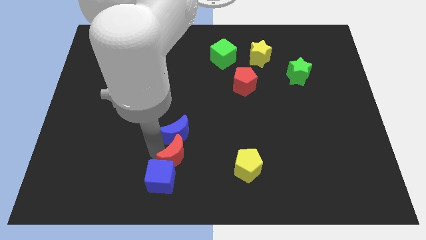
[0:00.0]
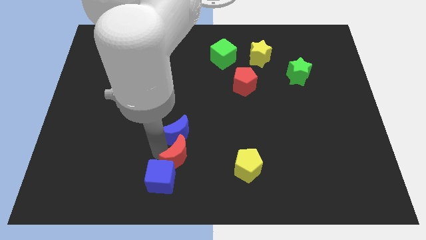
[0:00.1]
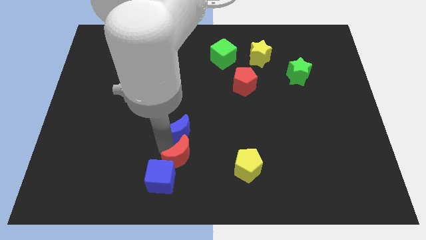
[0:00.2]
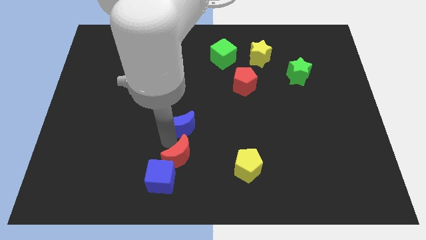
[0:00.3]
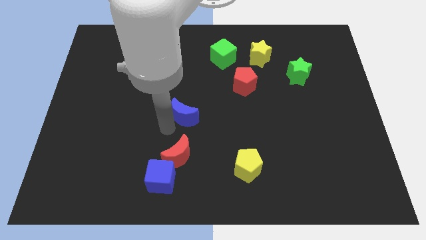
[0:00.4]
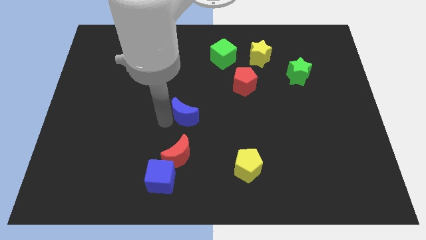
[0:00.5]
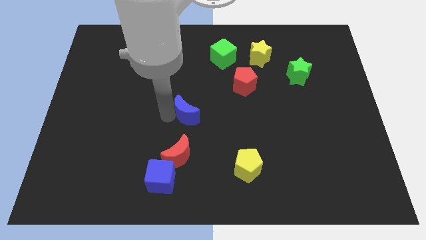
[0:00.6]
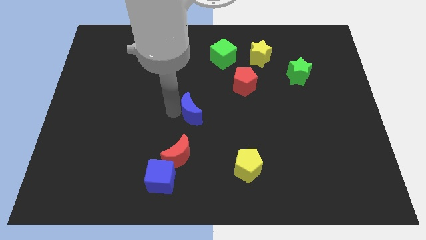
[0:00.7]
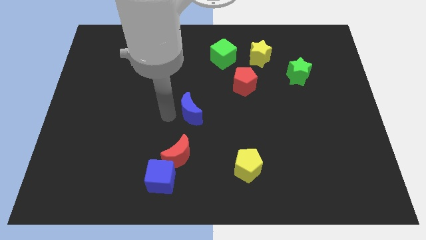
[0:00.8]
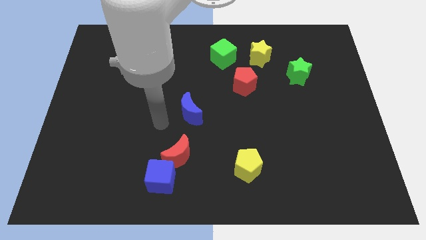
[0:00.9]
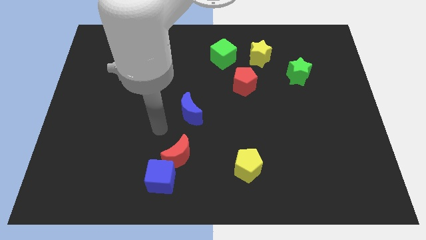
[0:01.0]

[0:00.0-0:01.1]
push the blue moon diagonally top right to the red pentagon

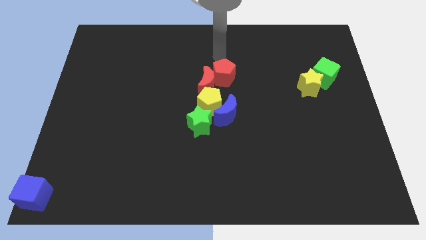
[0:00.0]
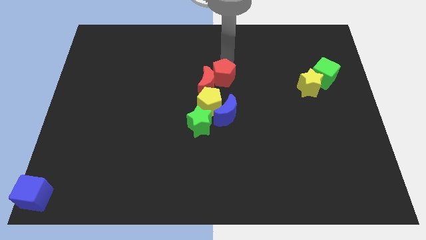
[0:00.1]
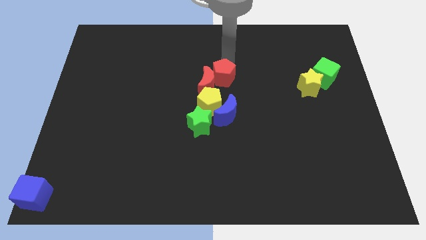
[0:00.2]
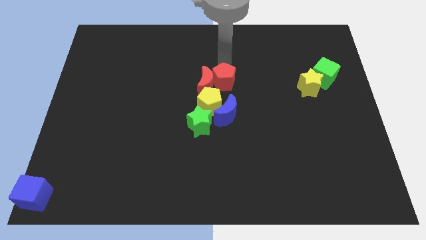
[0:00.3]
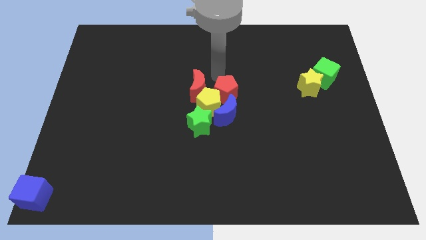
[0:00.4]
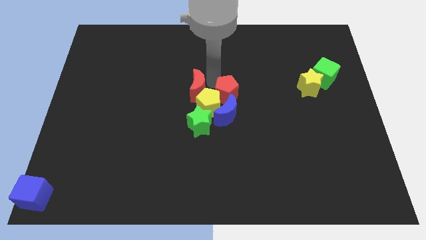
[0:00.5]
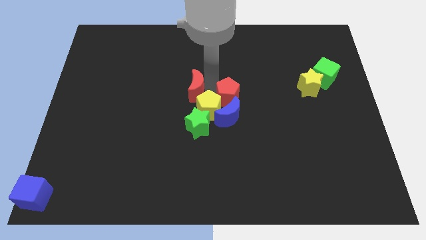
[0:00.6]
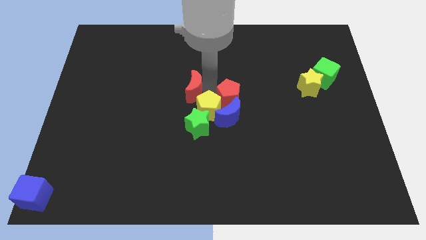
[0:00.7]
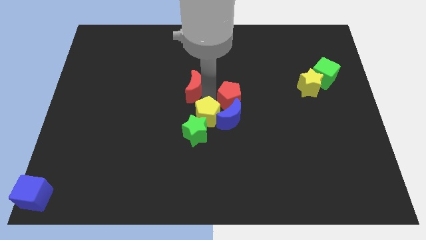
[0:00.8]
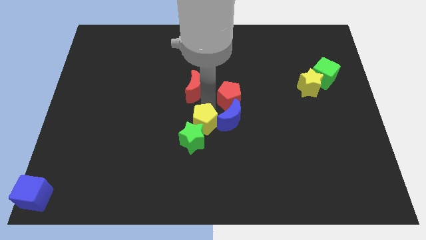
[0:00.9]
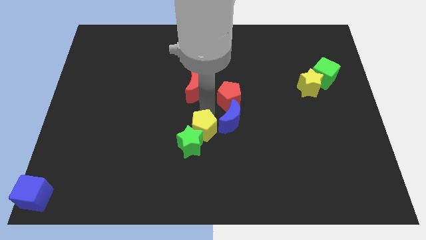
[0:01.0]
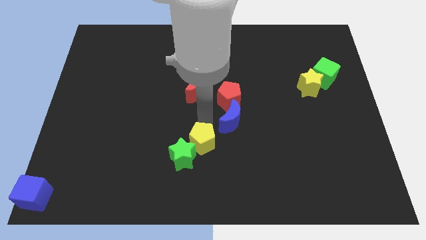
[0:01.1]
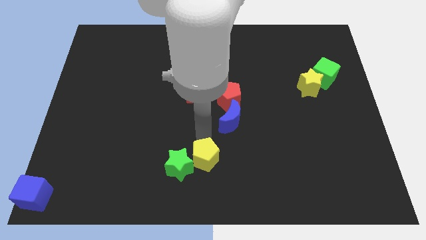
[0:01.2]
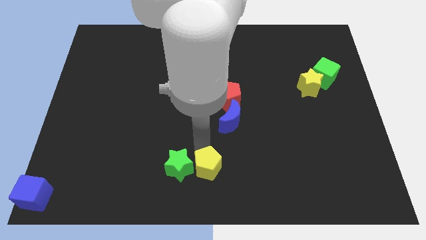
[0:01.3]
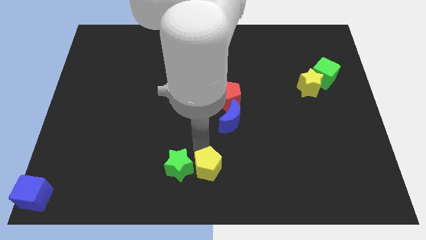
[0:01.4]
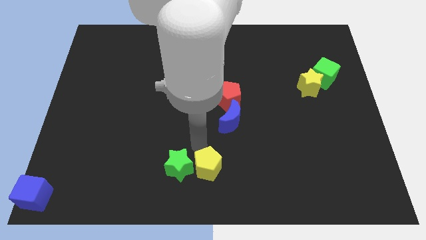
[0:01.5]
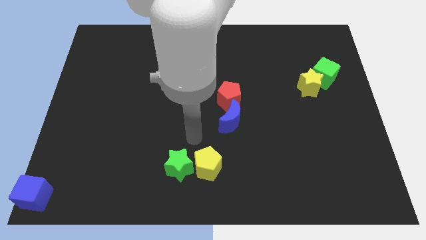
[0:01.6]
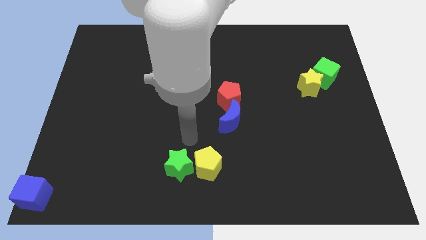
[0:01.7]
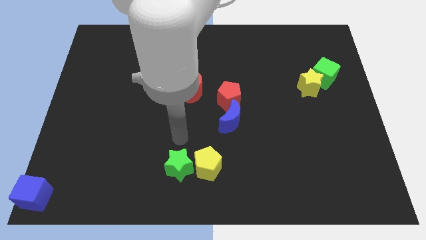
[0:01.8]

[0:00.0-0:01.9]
separate the red pentagon from the red crescent

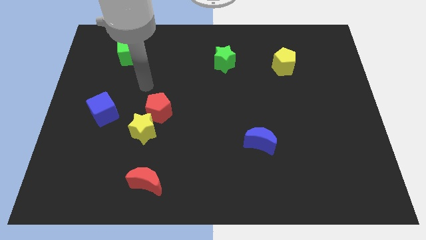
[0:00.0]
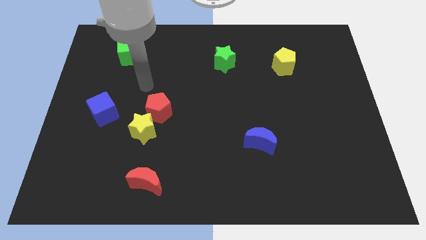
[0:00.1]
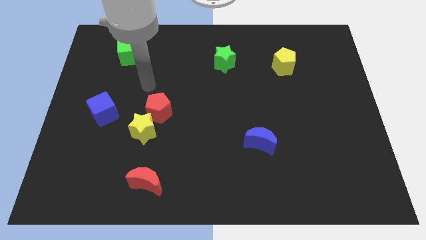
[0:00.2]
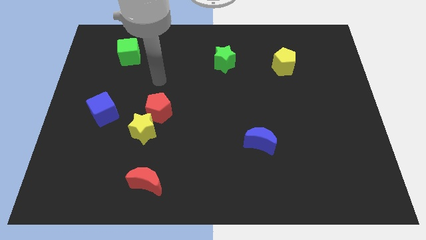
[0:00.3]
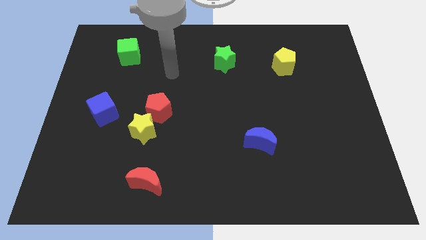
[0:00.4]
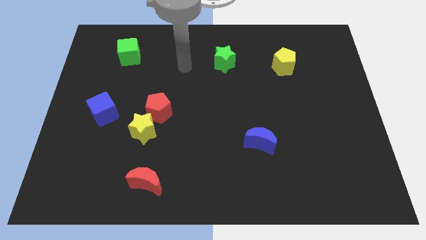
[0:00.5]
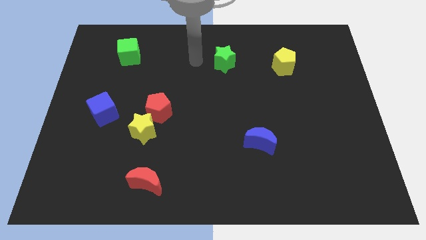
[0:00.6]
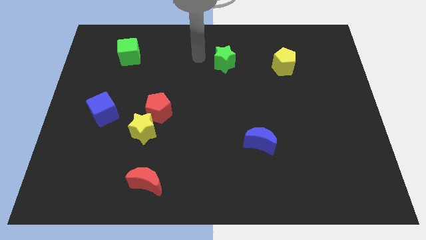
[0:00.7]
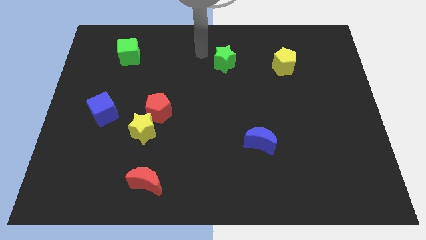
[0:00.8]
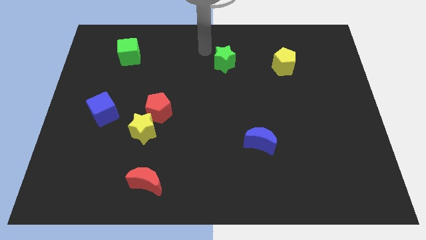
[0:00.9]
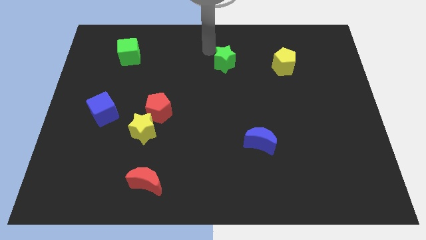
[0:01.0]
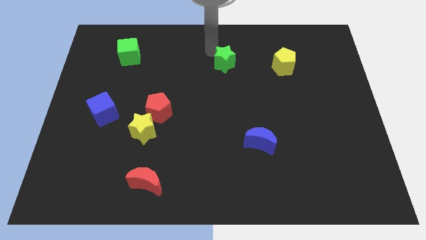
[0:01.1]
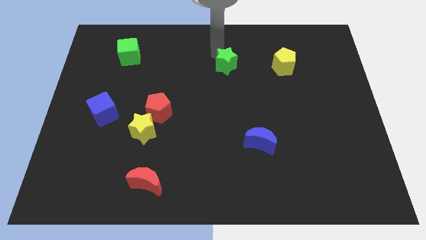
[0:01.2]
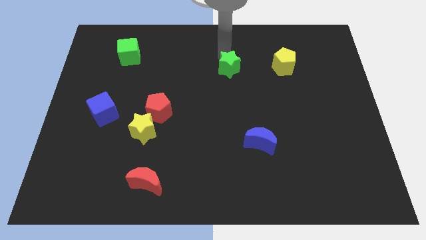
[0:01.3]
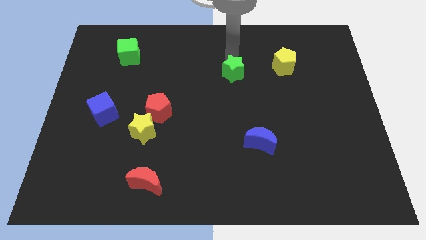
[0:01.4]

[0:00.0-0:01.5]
slightly touch the green star with the arm

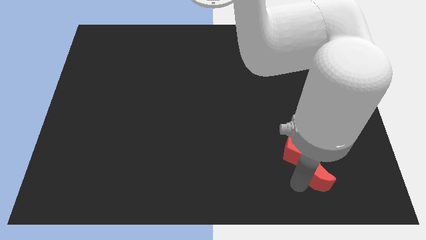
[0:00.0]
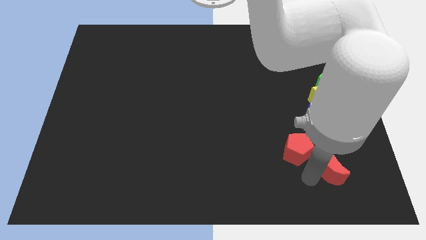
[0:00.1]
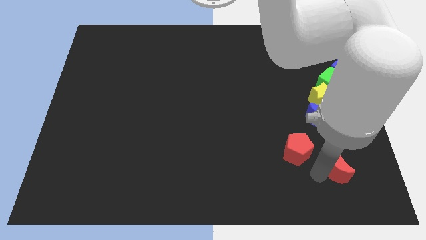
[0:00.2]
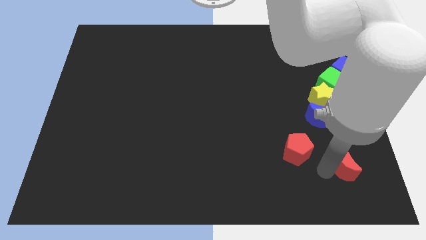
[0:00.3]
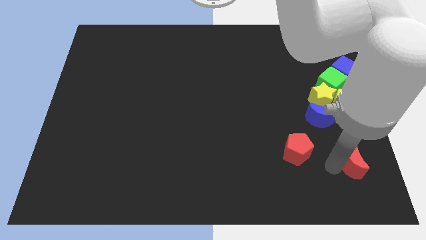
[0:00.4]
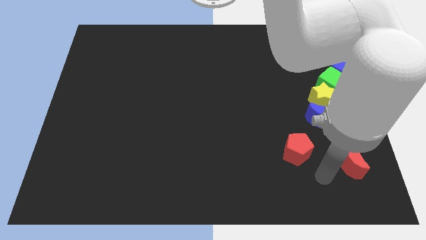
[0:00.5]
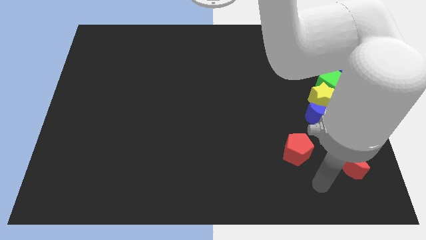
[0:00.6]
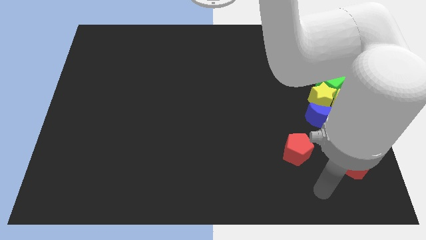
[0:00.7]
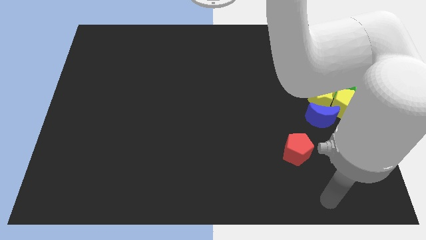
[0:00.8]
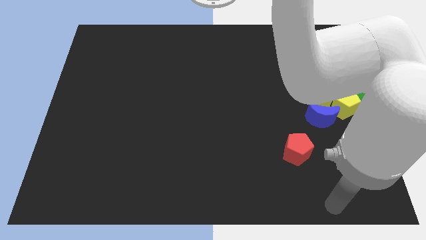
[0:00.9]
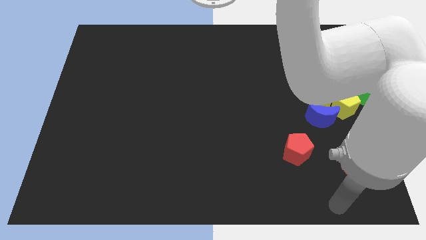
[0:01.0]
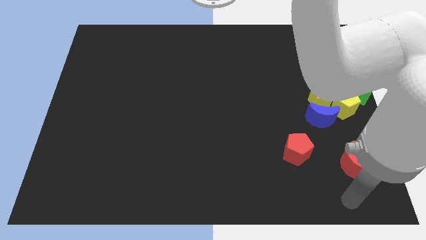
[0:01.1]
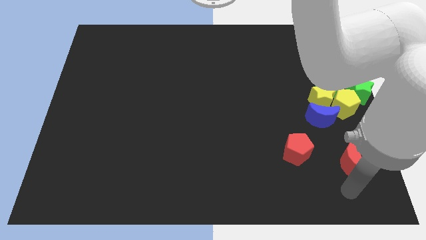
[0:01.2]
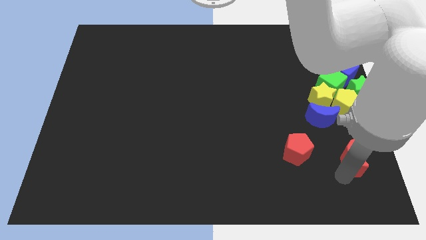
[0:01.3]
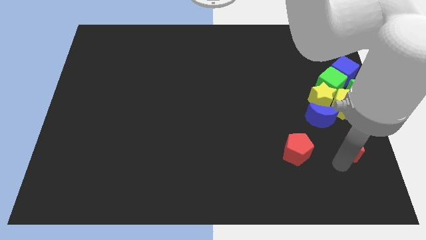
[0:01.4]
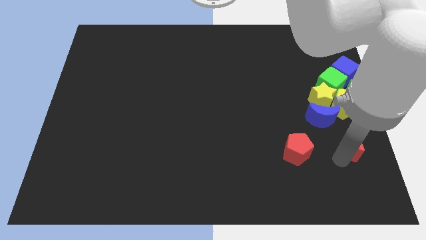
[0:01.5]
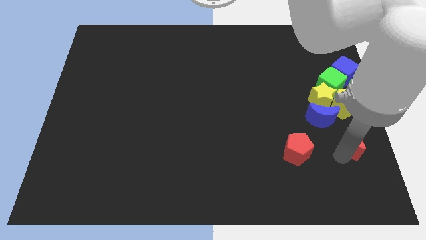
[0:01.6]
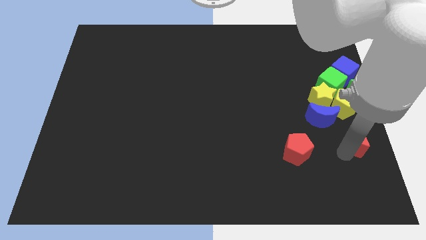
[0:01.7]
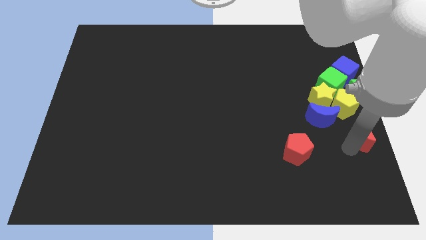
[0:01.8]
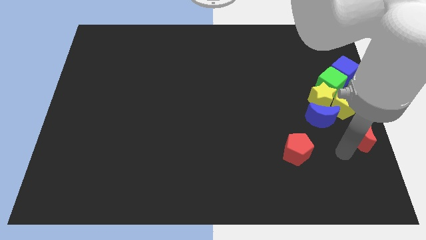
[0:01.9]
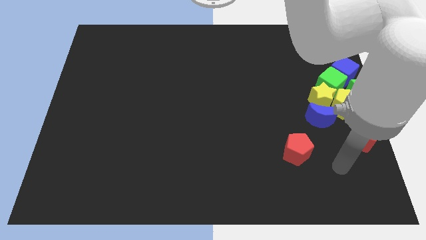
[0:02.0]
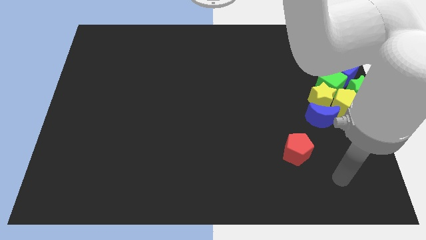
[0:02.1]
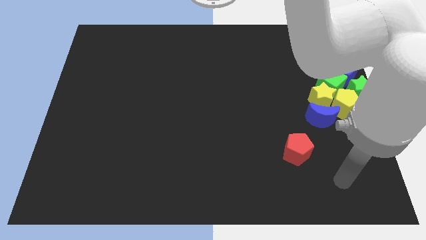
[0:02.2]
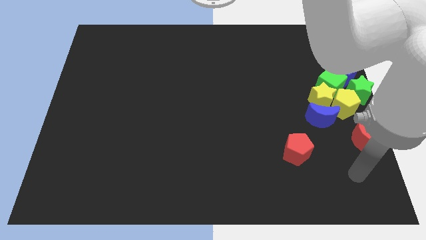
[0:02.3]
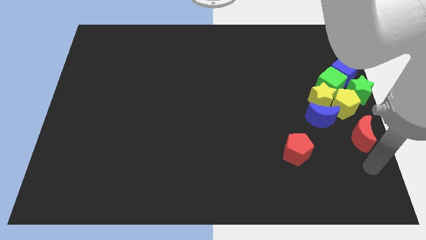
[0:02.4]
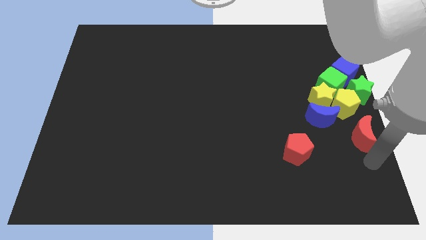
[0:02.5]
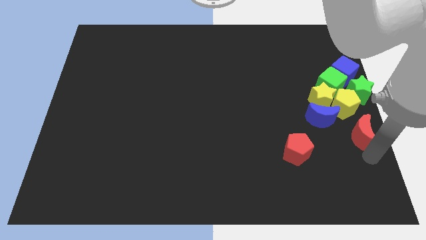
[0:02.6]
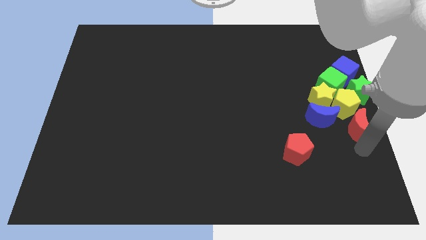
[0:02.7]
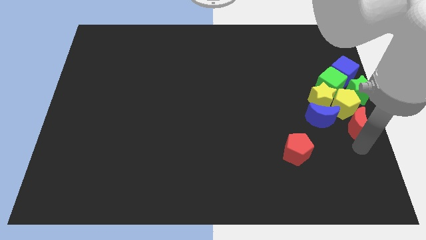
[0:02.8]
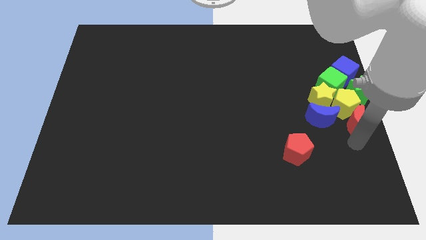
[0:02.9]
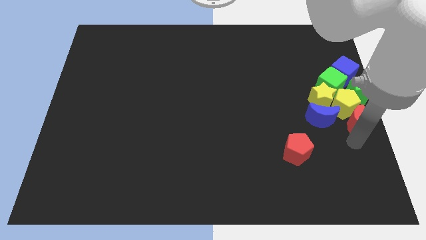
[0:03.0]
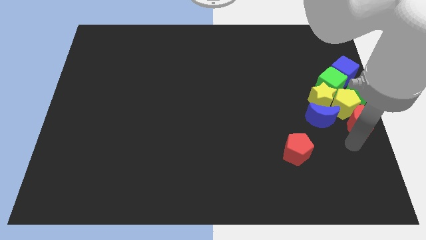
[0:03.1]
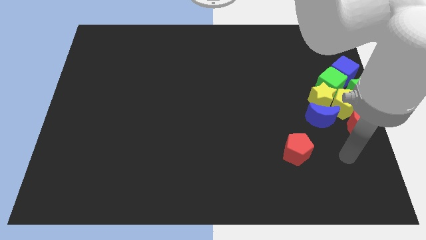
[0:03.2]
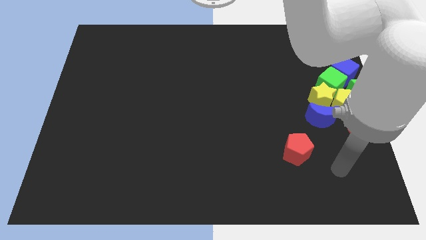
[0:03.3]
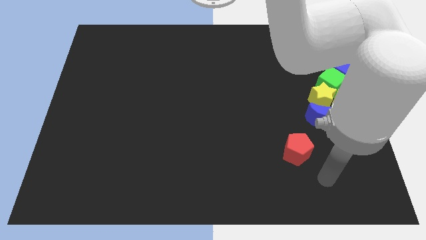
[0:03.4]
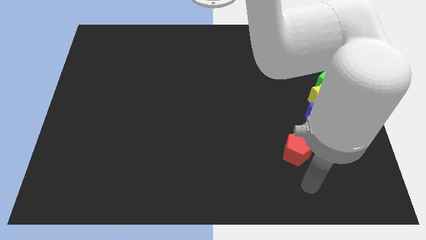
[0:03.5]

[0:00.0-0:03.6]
place the red crescent beside the yellow pentagon

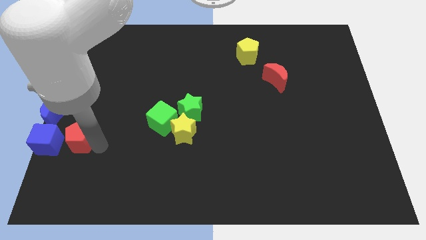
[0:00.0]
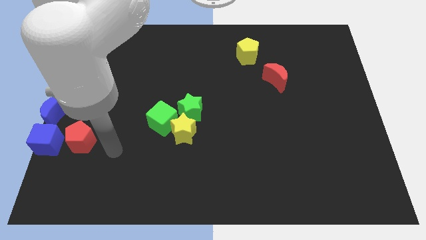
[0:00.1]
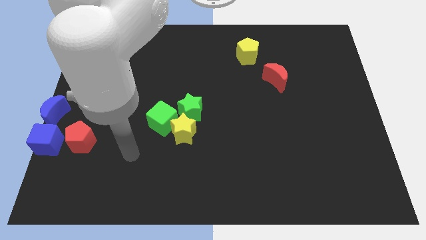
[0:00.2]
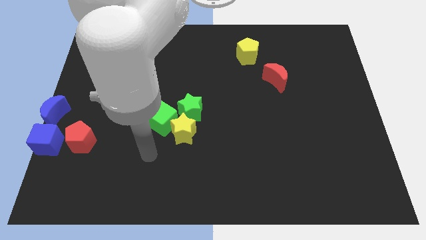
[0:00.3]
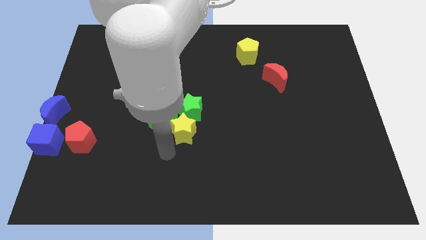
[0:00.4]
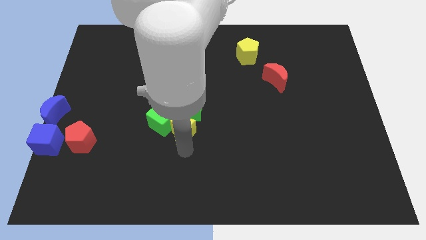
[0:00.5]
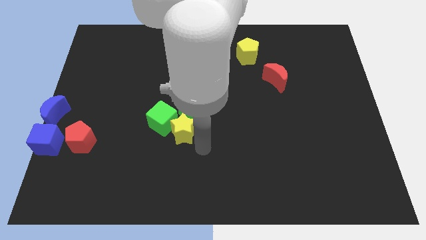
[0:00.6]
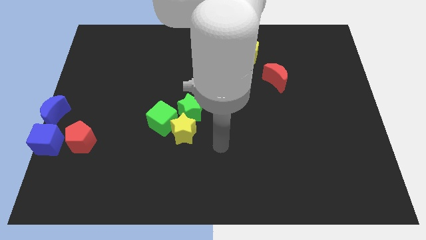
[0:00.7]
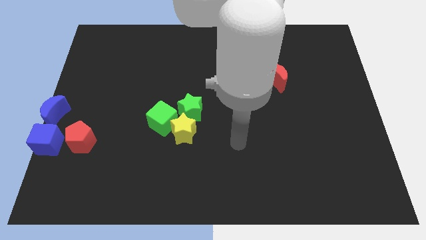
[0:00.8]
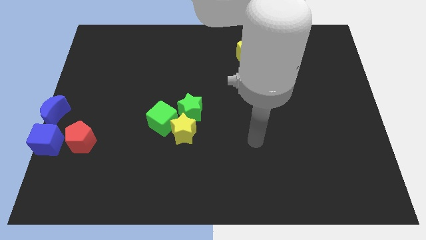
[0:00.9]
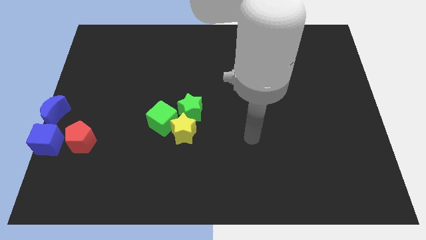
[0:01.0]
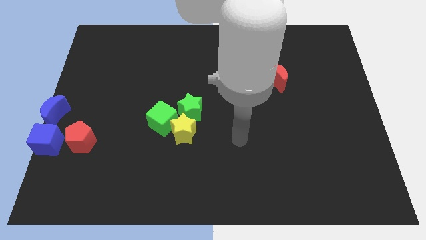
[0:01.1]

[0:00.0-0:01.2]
move your arm away from the red pentagon
